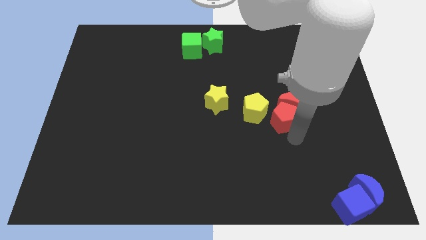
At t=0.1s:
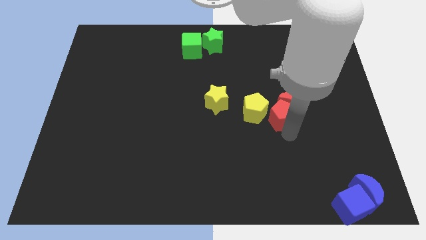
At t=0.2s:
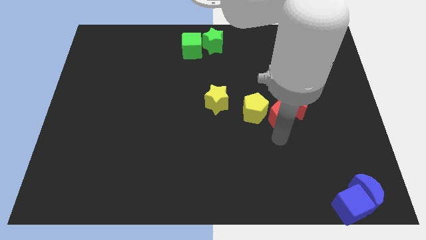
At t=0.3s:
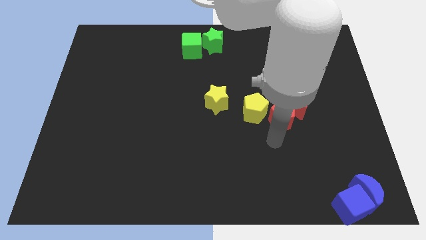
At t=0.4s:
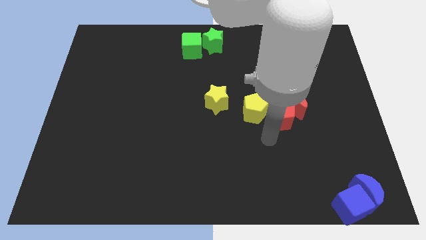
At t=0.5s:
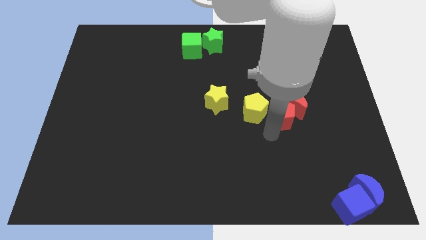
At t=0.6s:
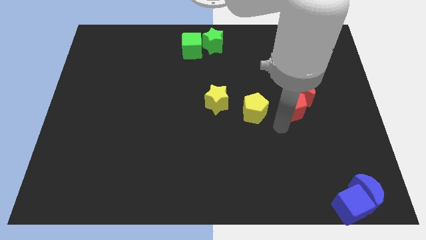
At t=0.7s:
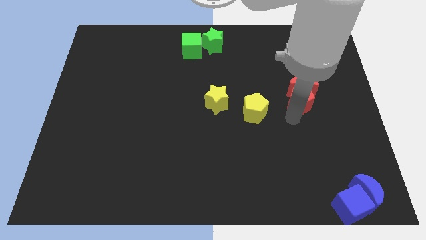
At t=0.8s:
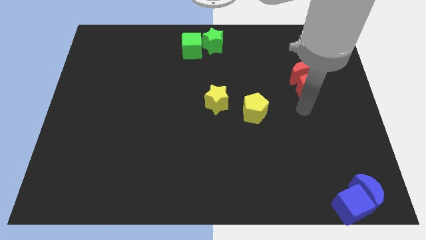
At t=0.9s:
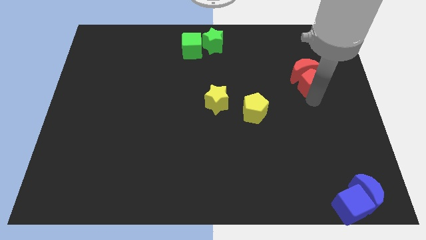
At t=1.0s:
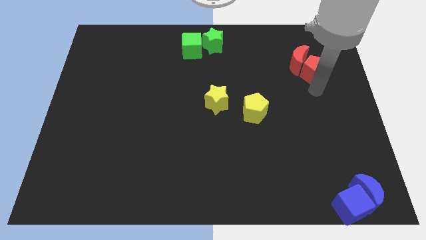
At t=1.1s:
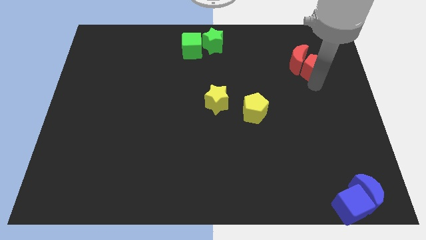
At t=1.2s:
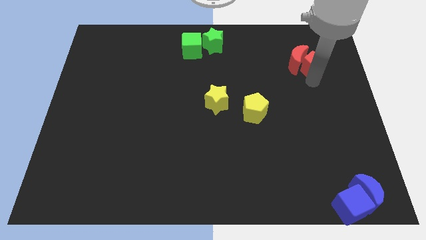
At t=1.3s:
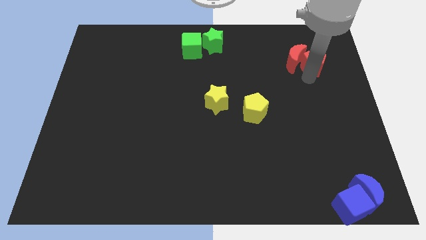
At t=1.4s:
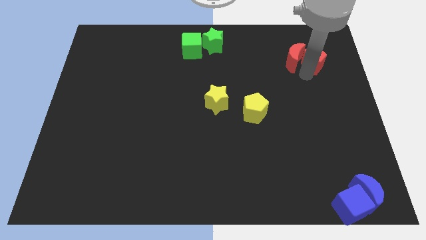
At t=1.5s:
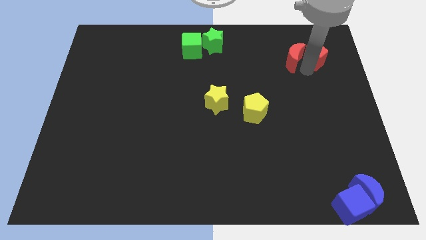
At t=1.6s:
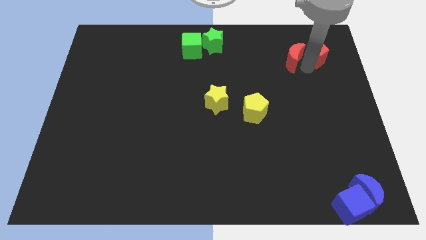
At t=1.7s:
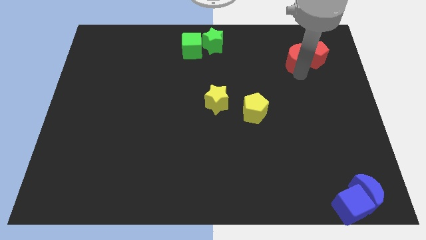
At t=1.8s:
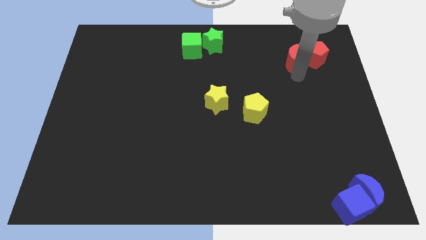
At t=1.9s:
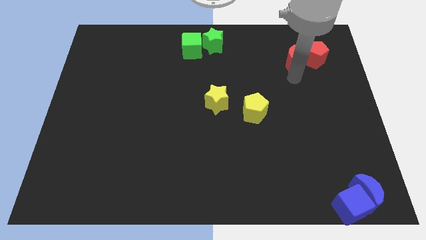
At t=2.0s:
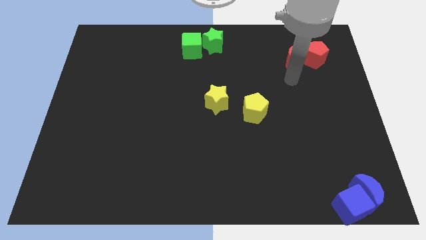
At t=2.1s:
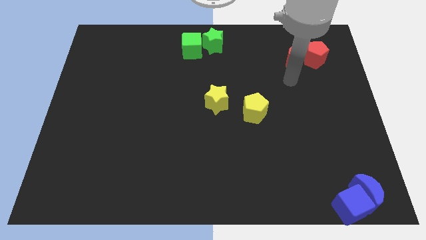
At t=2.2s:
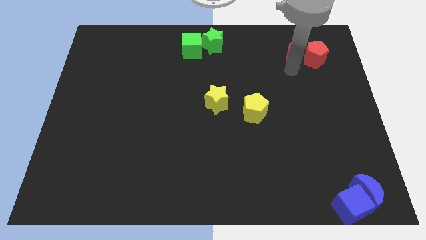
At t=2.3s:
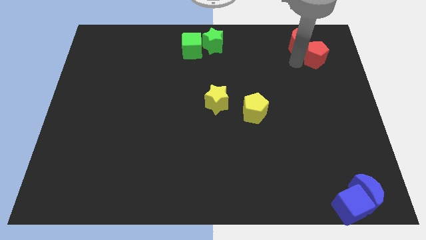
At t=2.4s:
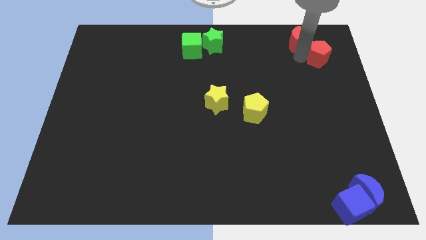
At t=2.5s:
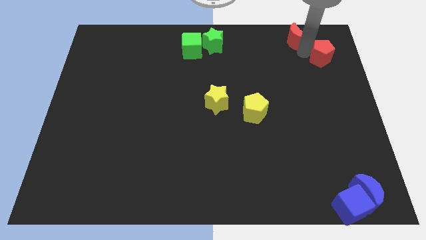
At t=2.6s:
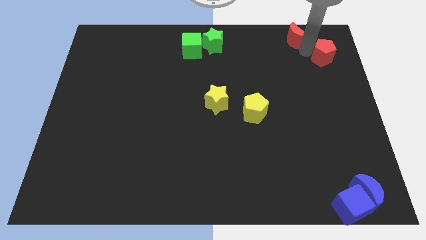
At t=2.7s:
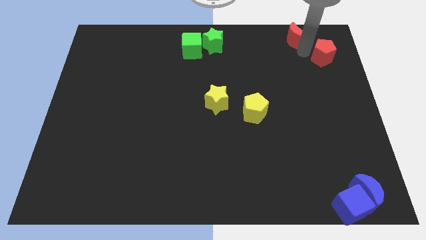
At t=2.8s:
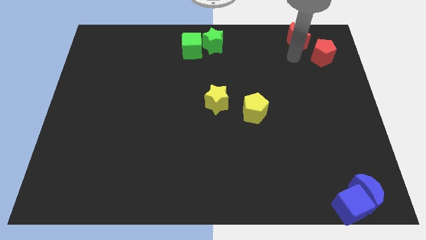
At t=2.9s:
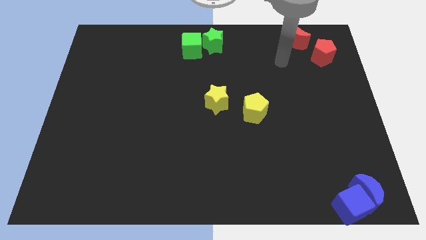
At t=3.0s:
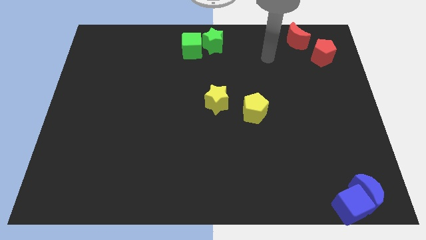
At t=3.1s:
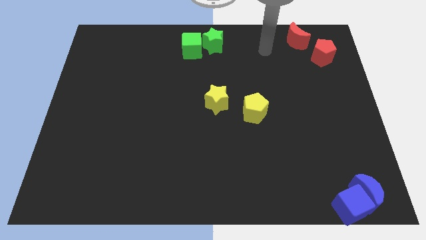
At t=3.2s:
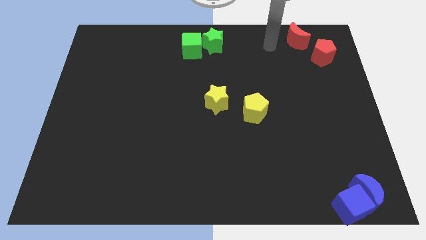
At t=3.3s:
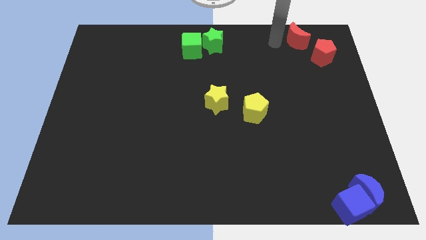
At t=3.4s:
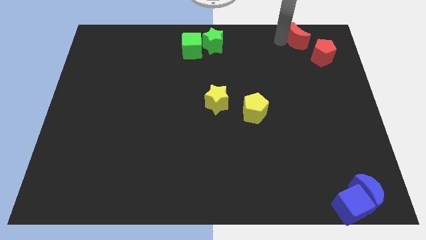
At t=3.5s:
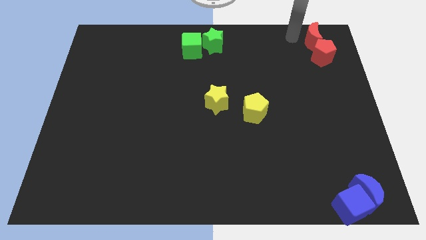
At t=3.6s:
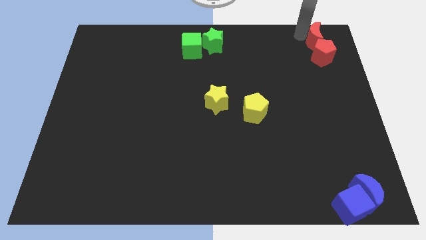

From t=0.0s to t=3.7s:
move both the red blocks towards the top right

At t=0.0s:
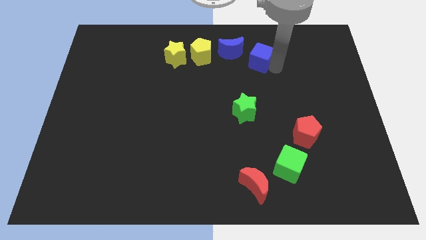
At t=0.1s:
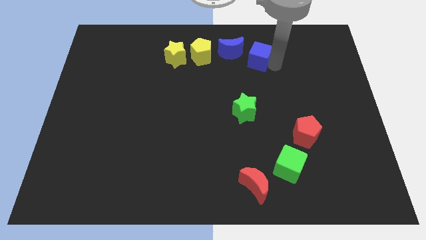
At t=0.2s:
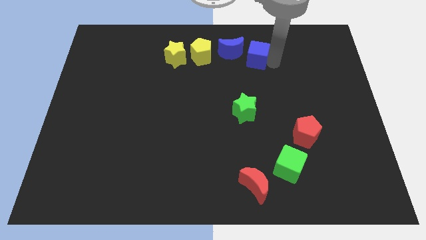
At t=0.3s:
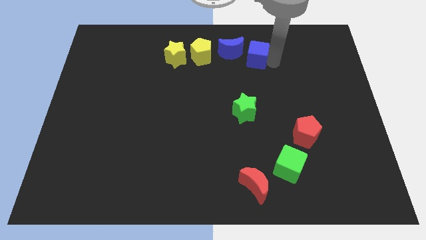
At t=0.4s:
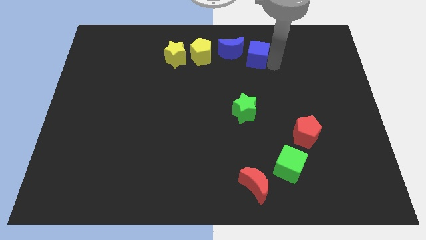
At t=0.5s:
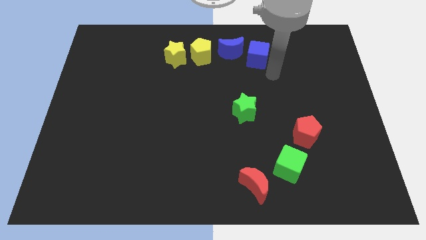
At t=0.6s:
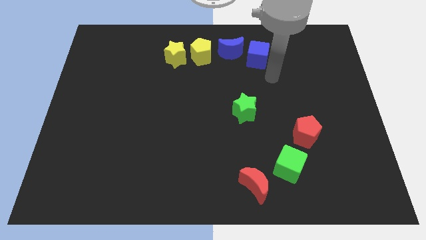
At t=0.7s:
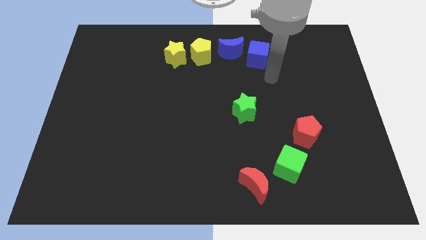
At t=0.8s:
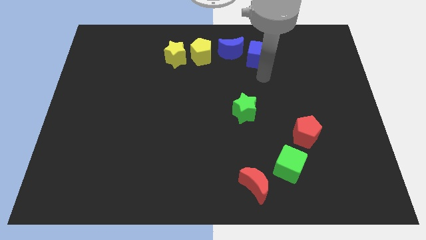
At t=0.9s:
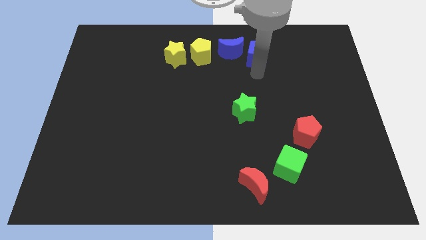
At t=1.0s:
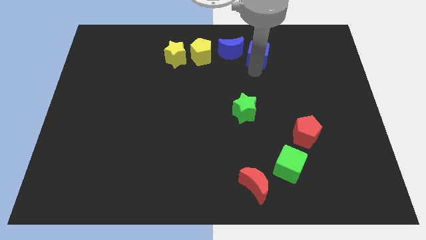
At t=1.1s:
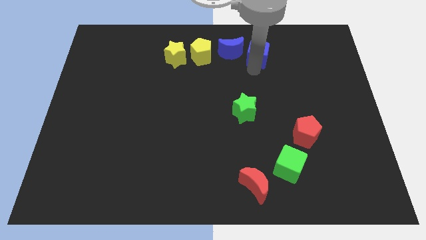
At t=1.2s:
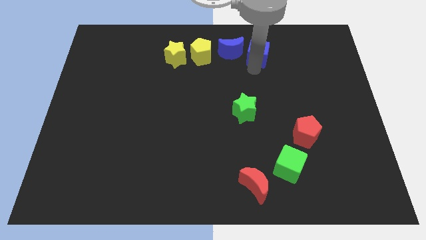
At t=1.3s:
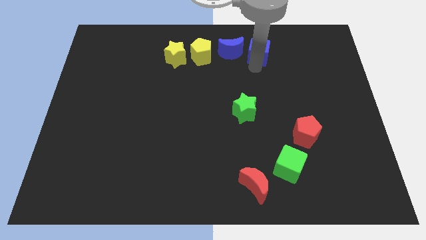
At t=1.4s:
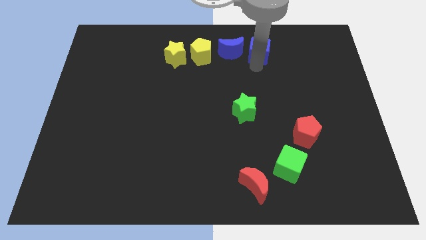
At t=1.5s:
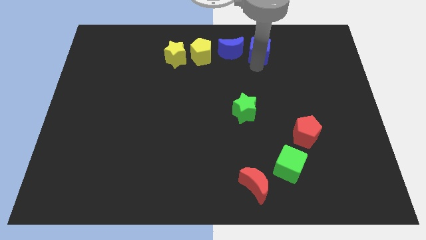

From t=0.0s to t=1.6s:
put the blue cube right to the blue moon

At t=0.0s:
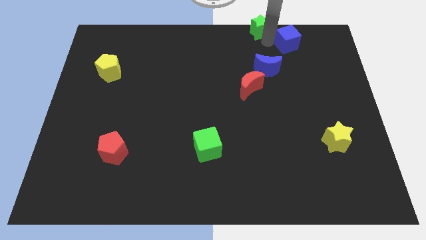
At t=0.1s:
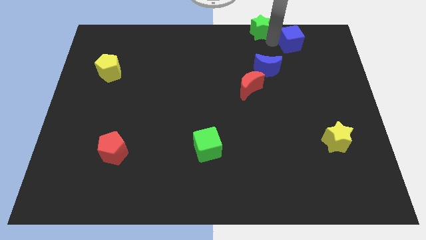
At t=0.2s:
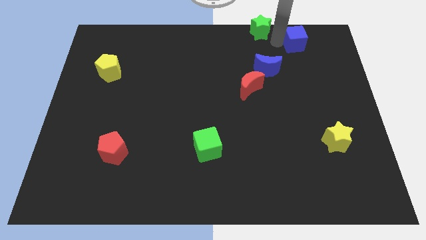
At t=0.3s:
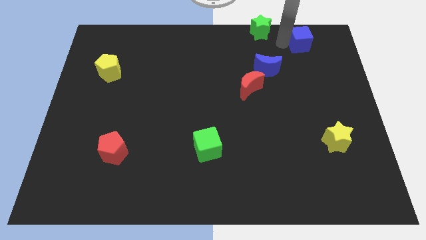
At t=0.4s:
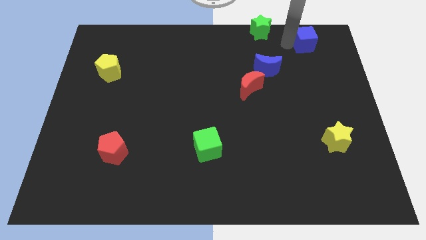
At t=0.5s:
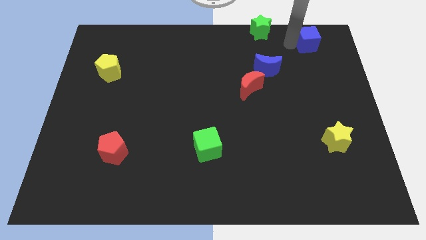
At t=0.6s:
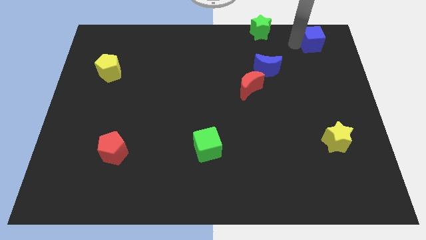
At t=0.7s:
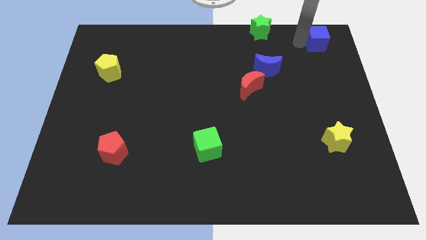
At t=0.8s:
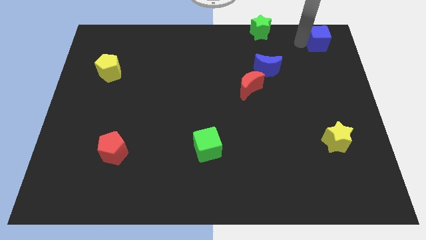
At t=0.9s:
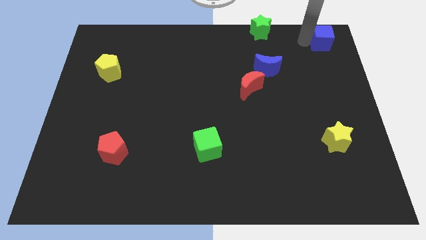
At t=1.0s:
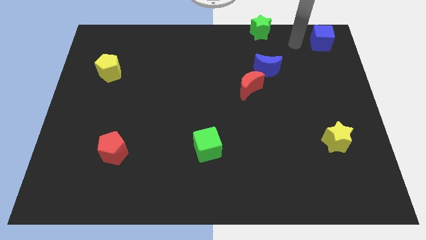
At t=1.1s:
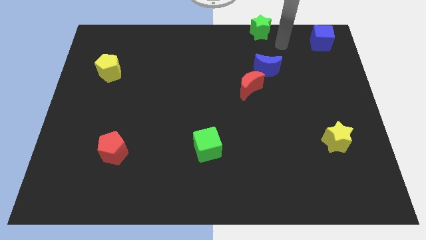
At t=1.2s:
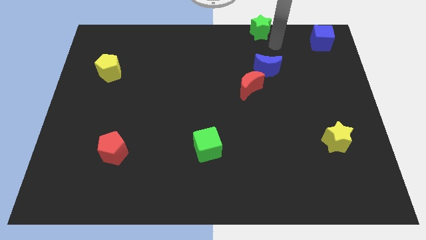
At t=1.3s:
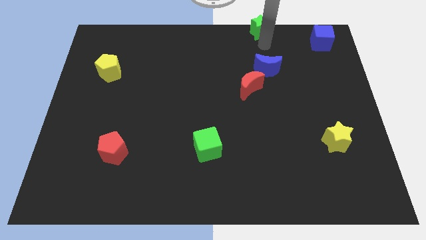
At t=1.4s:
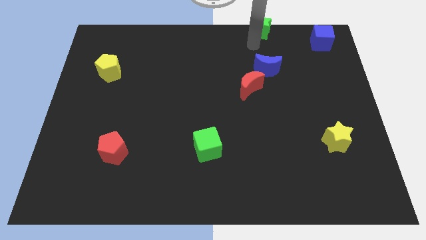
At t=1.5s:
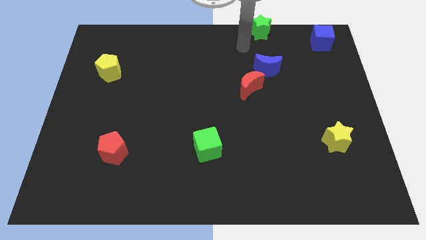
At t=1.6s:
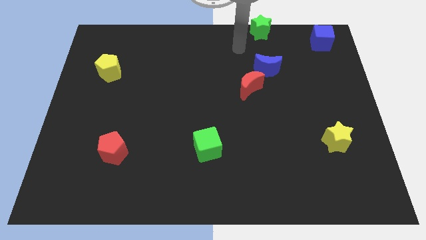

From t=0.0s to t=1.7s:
push the blue cube apart from the green star

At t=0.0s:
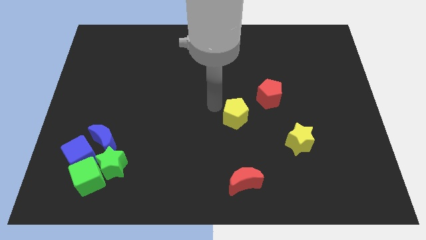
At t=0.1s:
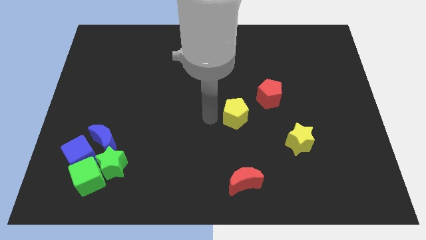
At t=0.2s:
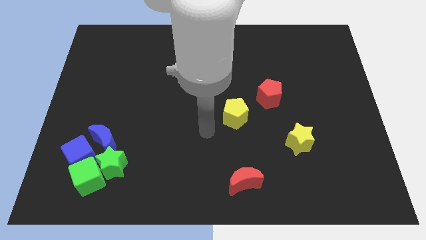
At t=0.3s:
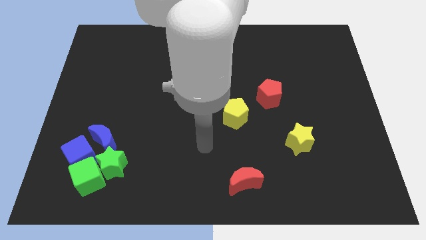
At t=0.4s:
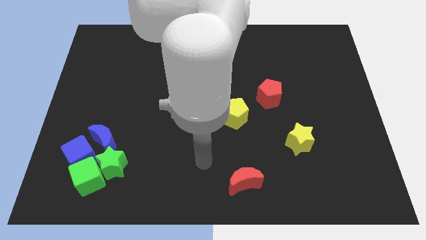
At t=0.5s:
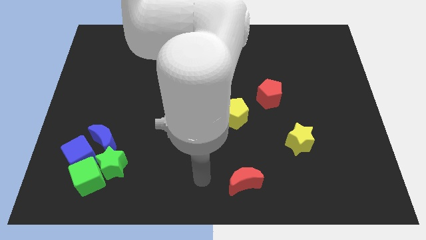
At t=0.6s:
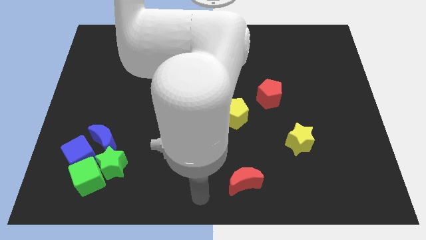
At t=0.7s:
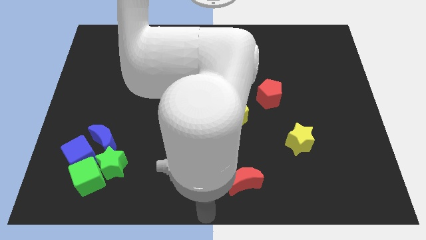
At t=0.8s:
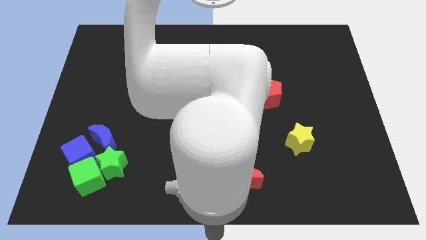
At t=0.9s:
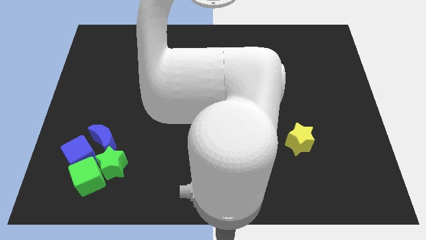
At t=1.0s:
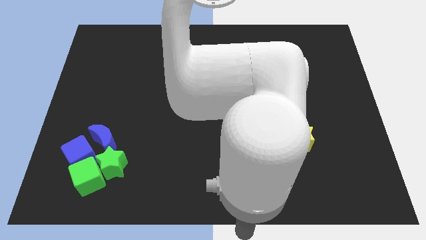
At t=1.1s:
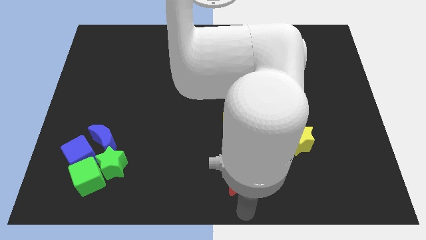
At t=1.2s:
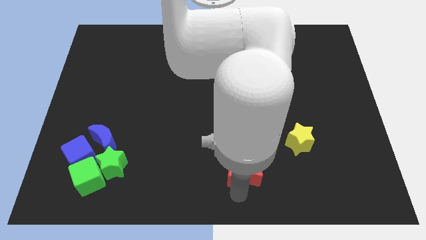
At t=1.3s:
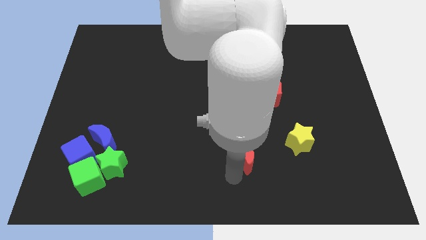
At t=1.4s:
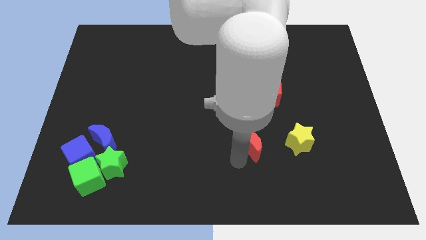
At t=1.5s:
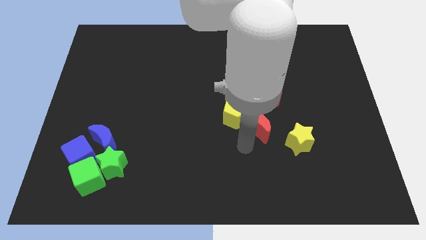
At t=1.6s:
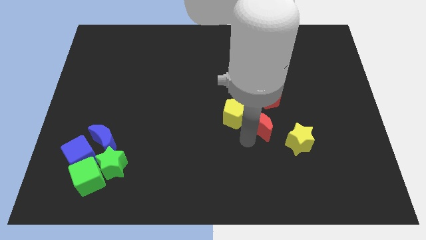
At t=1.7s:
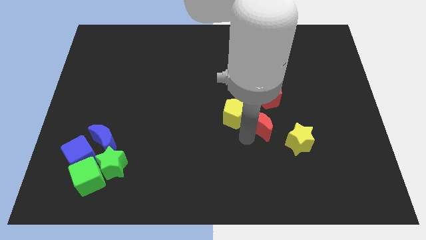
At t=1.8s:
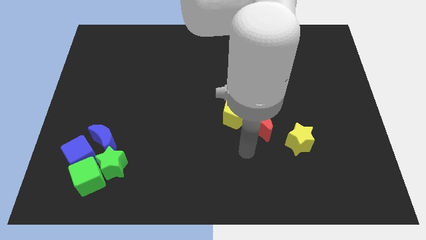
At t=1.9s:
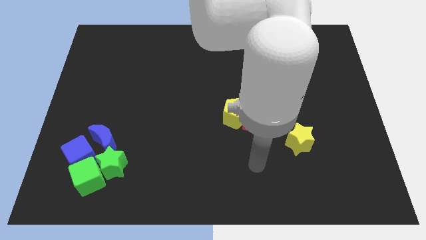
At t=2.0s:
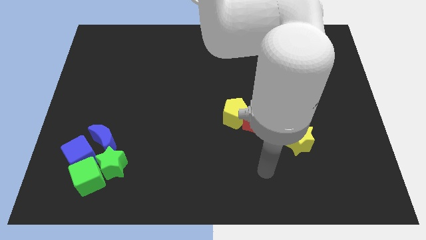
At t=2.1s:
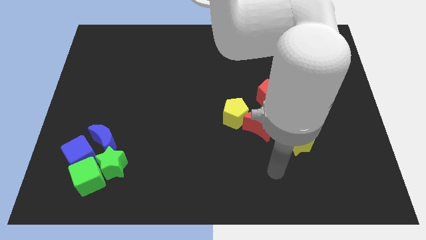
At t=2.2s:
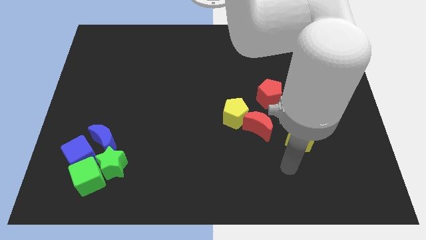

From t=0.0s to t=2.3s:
place the red crescent below the red pentagon
